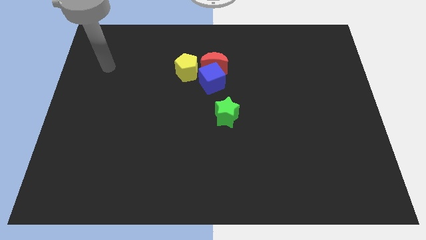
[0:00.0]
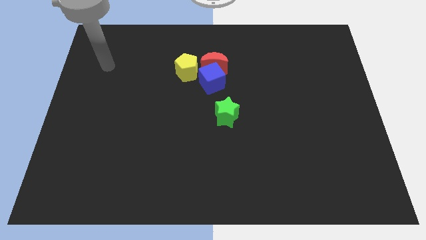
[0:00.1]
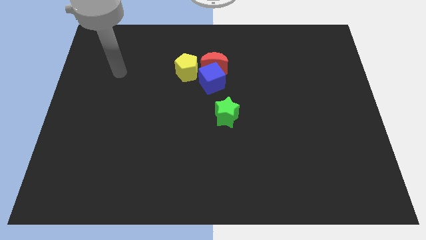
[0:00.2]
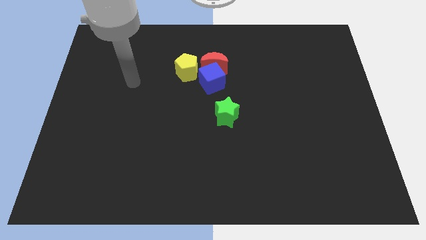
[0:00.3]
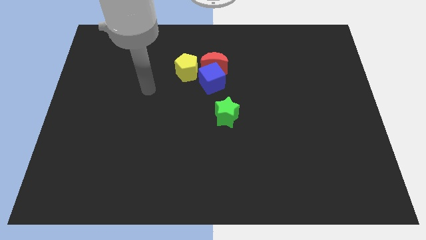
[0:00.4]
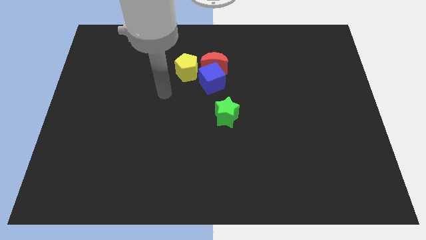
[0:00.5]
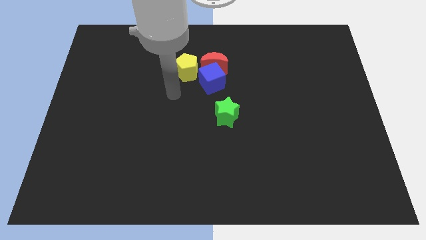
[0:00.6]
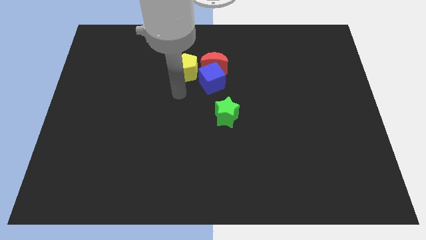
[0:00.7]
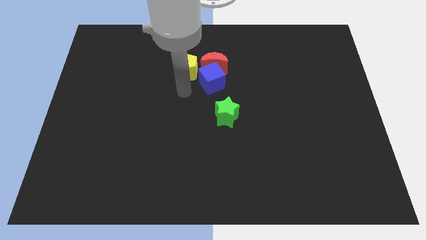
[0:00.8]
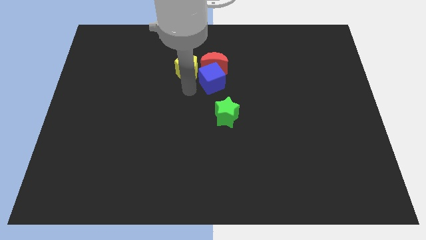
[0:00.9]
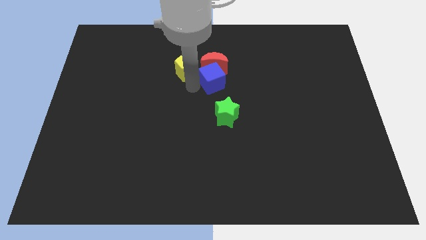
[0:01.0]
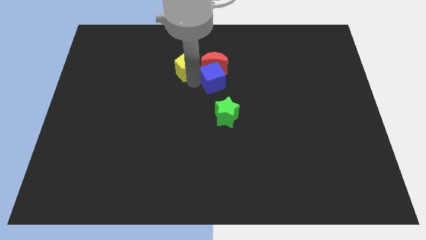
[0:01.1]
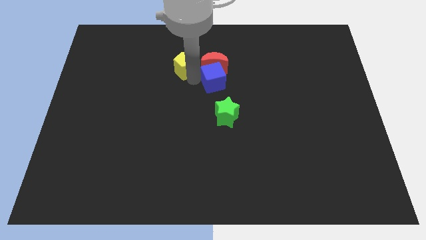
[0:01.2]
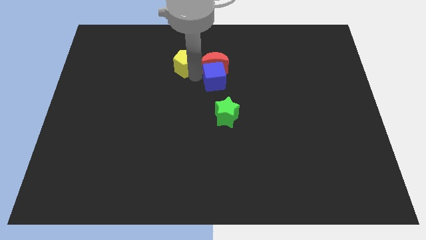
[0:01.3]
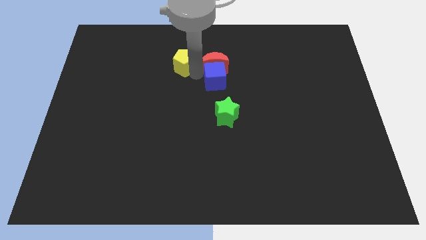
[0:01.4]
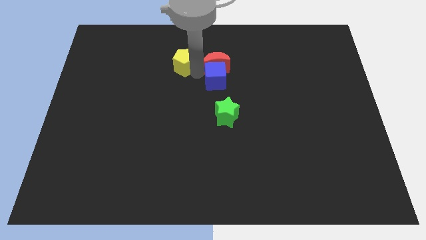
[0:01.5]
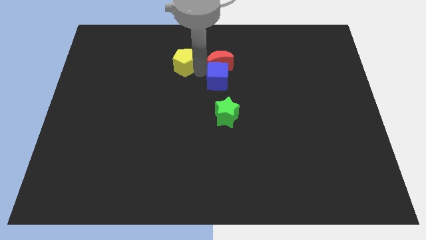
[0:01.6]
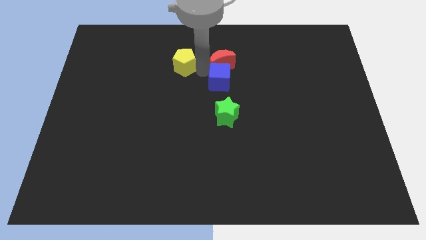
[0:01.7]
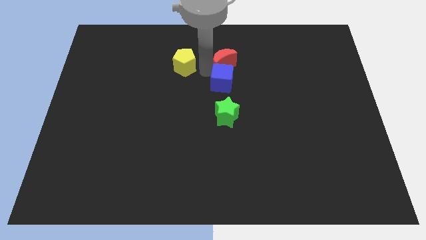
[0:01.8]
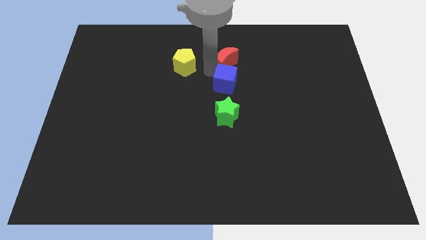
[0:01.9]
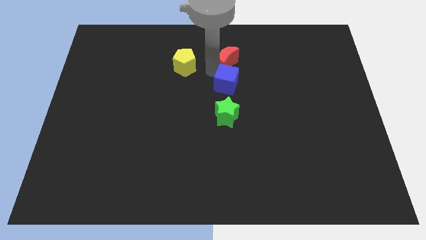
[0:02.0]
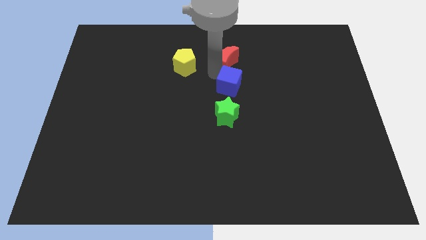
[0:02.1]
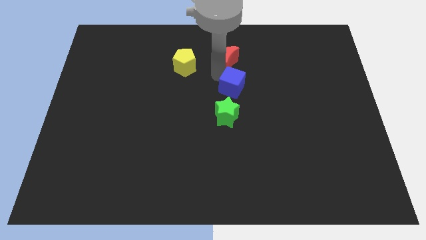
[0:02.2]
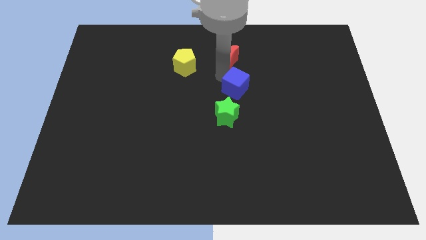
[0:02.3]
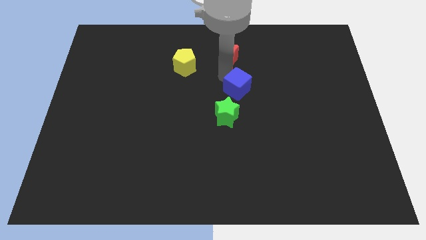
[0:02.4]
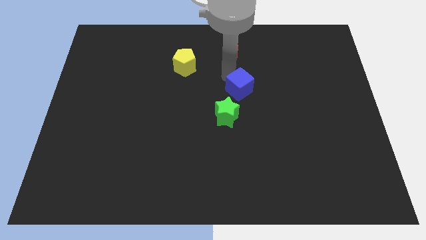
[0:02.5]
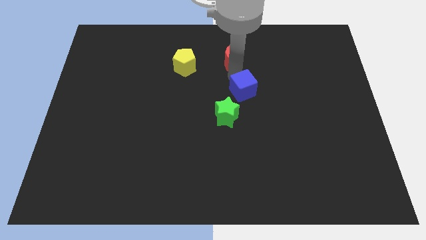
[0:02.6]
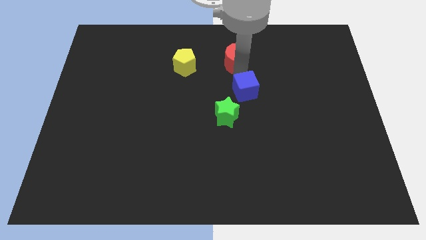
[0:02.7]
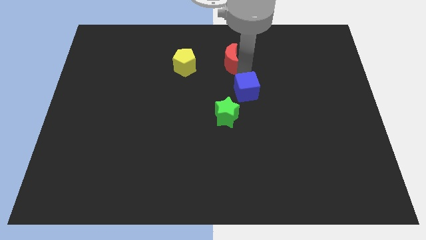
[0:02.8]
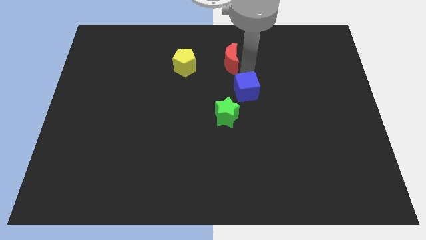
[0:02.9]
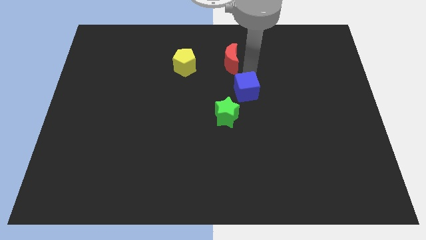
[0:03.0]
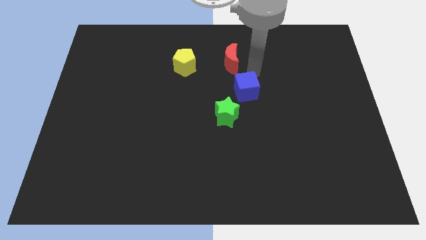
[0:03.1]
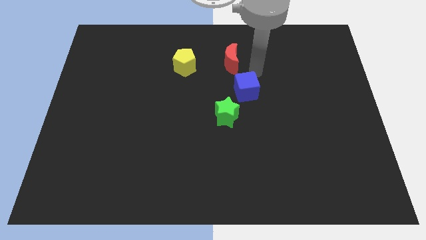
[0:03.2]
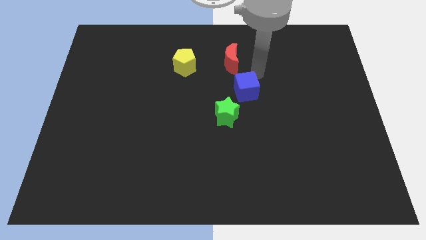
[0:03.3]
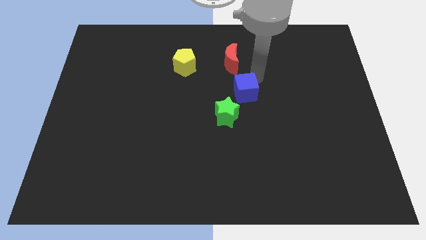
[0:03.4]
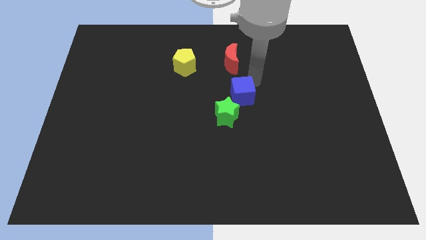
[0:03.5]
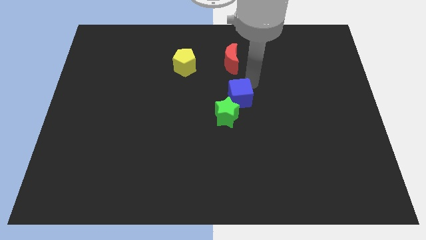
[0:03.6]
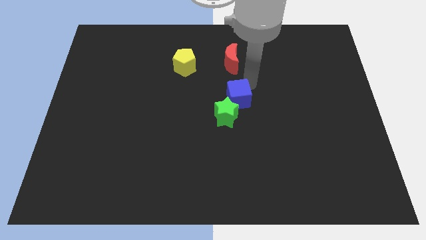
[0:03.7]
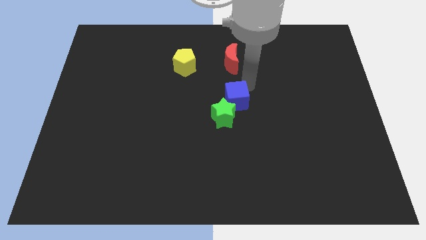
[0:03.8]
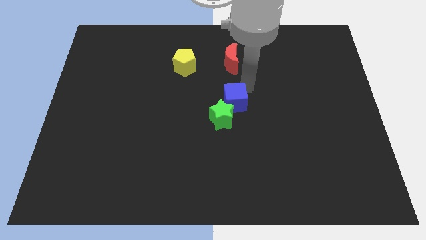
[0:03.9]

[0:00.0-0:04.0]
put the blue cube close to the star

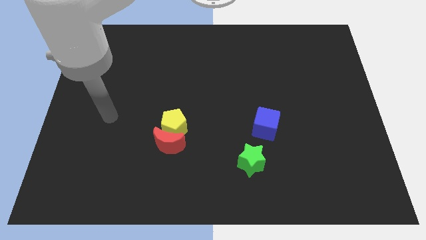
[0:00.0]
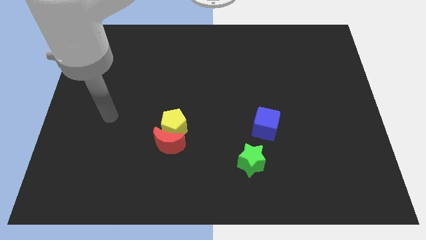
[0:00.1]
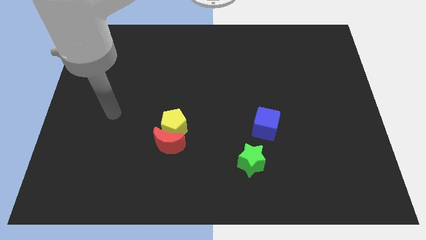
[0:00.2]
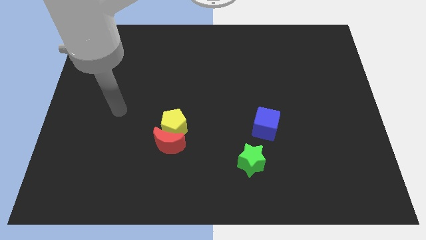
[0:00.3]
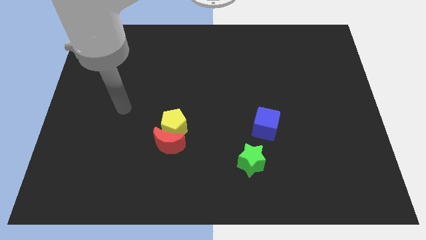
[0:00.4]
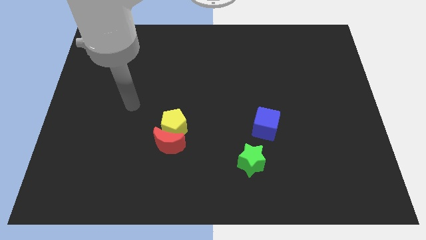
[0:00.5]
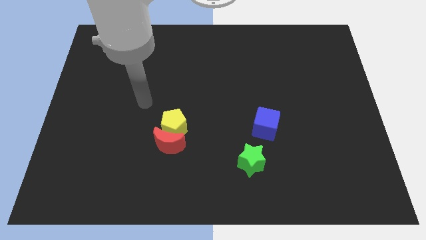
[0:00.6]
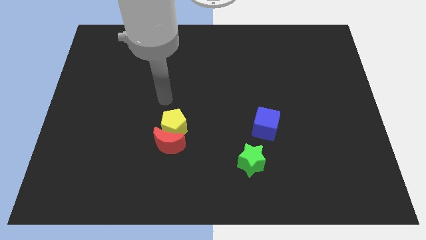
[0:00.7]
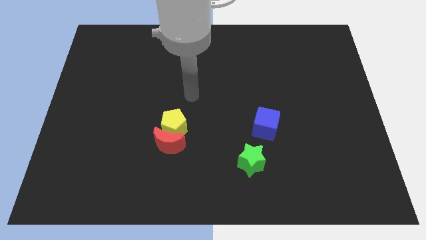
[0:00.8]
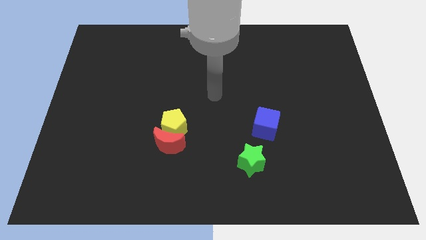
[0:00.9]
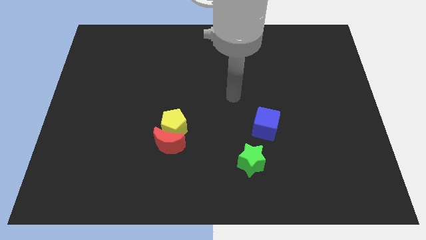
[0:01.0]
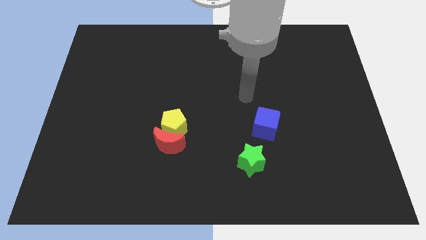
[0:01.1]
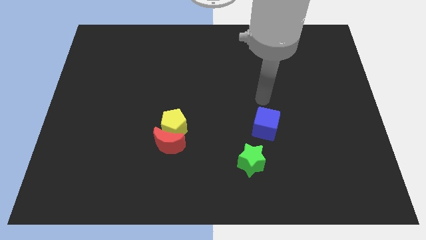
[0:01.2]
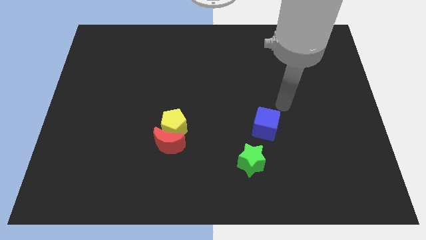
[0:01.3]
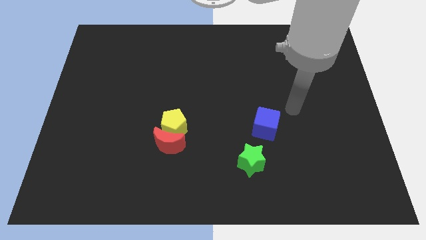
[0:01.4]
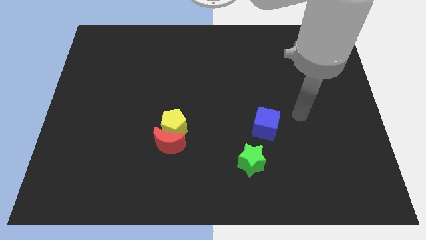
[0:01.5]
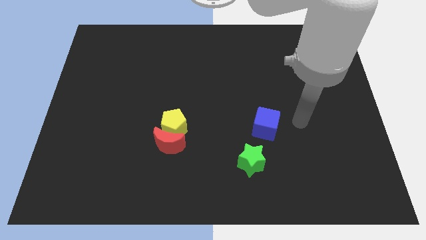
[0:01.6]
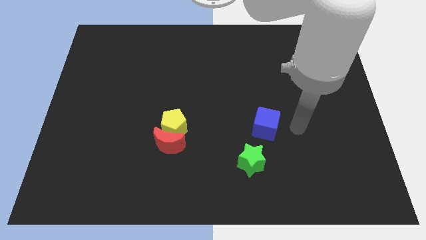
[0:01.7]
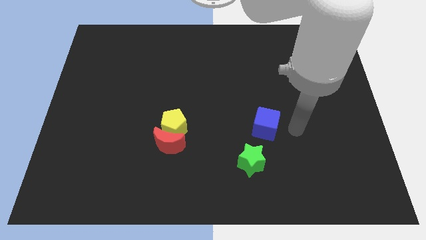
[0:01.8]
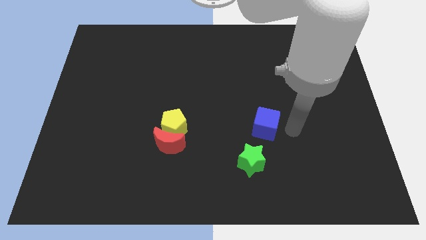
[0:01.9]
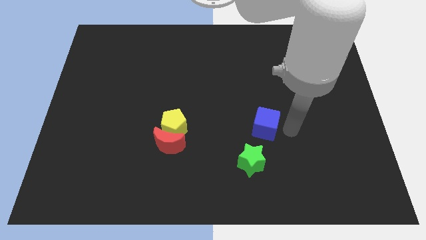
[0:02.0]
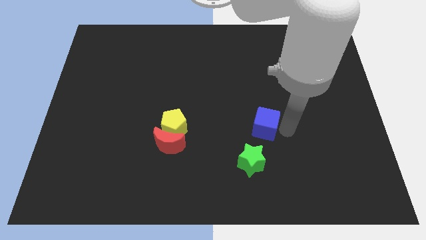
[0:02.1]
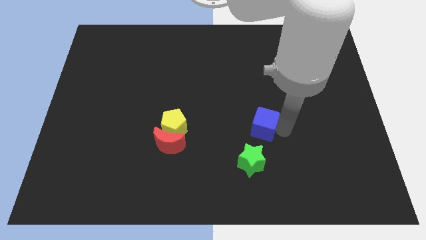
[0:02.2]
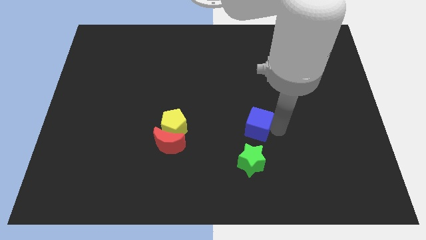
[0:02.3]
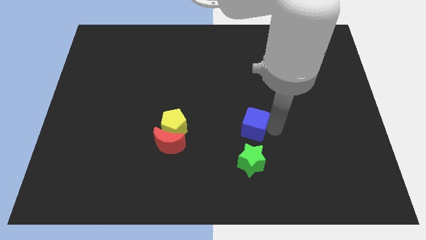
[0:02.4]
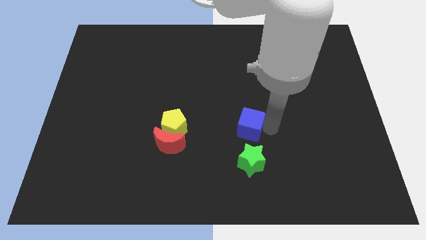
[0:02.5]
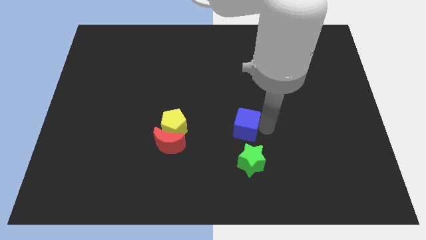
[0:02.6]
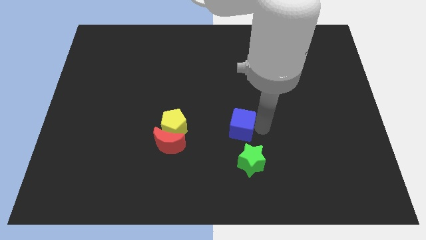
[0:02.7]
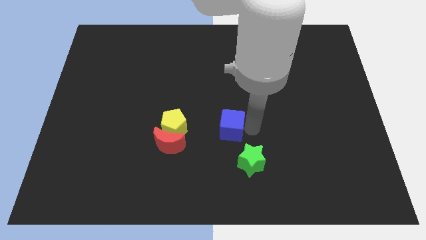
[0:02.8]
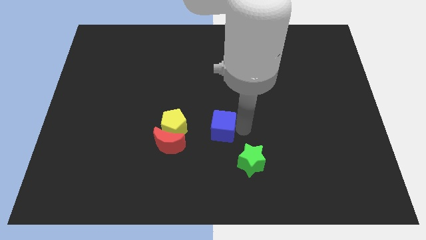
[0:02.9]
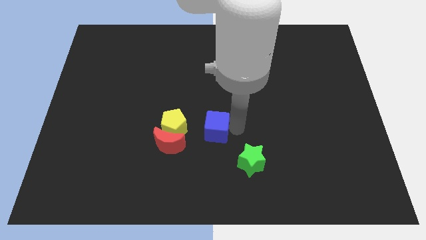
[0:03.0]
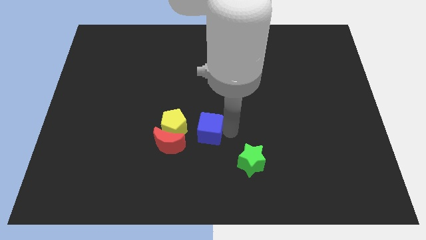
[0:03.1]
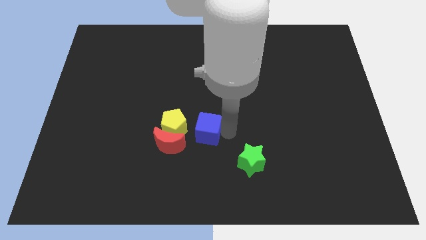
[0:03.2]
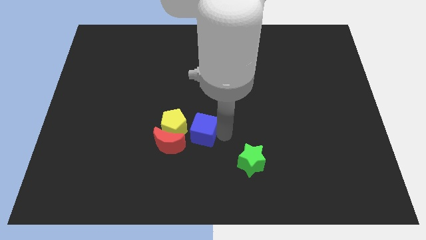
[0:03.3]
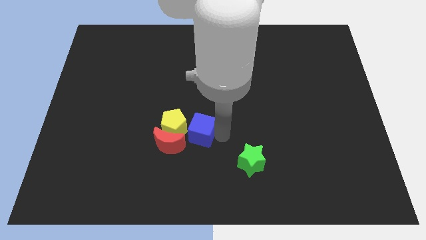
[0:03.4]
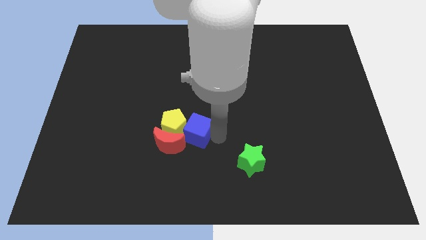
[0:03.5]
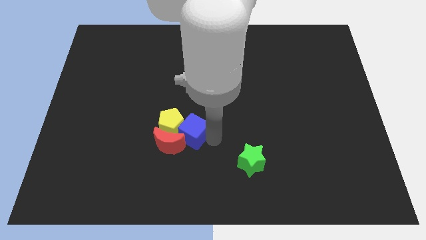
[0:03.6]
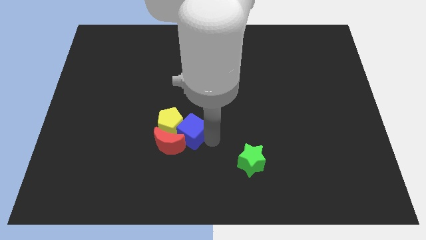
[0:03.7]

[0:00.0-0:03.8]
slide the blue cube close to the pentagon

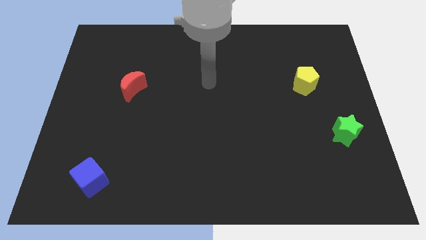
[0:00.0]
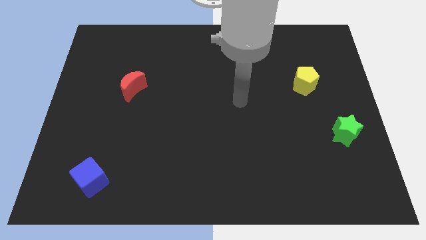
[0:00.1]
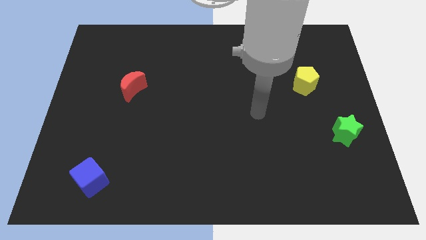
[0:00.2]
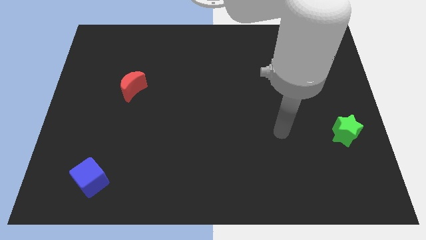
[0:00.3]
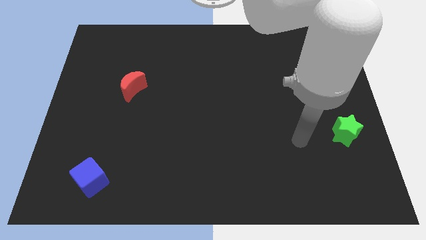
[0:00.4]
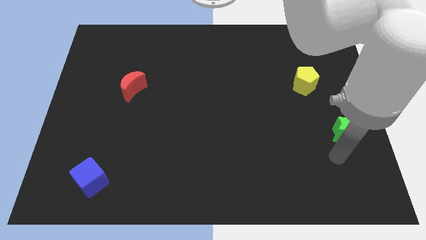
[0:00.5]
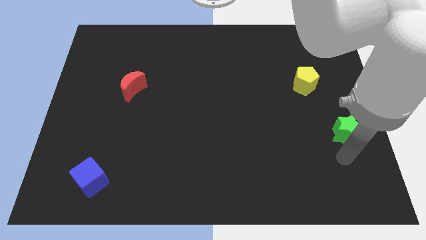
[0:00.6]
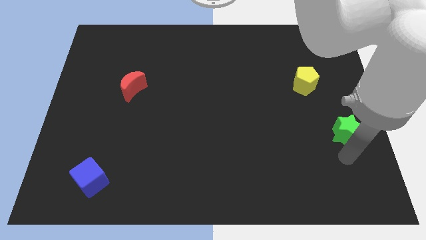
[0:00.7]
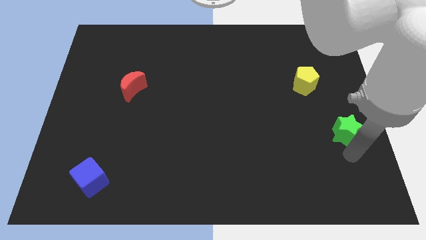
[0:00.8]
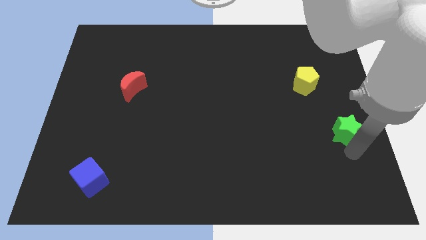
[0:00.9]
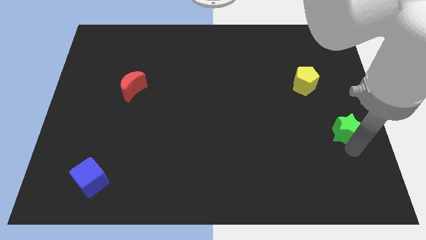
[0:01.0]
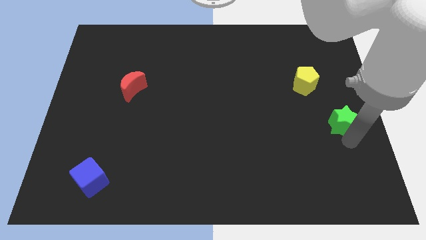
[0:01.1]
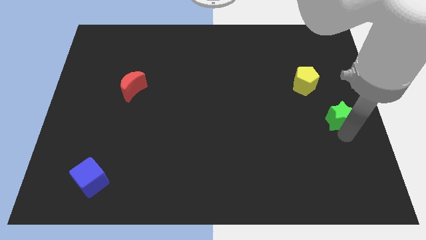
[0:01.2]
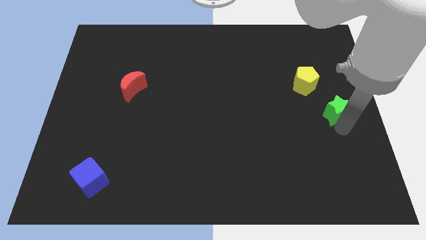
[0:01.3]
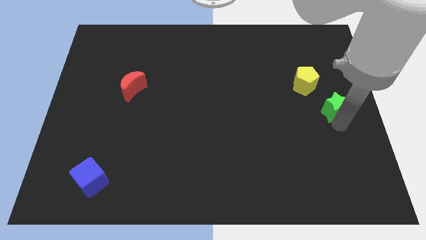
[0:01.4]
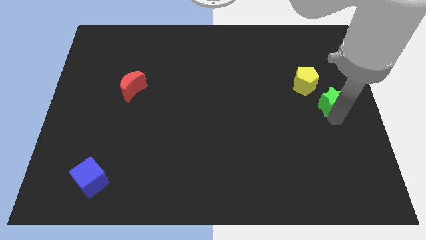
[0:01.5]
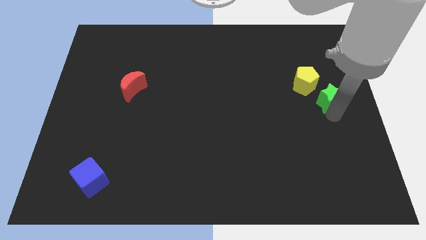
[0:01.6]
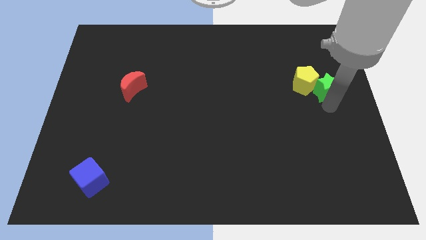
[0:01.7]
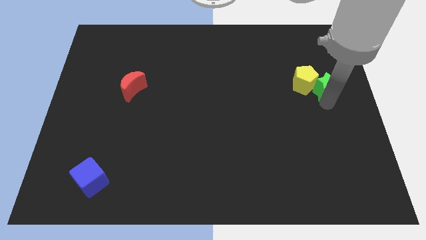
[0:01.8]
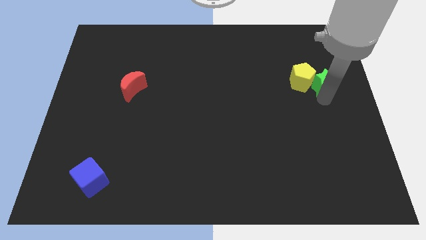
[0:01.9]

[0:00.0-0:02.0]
move the star towards the pentagon
